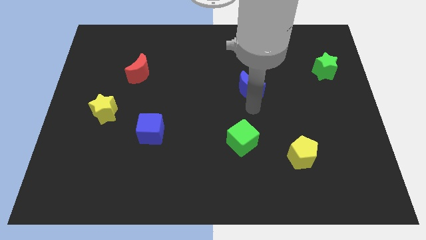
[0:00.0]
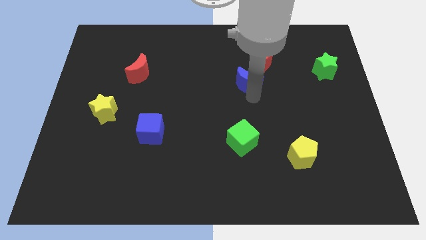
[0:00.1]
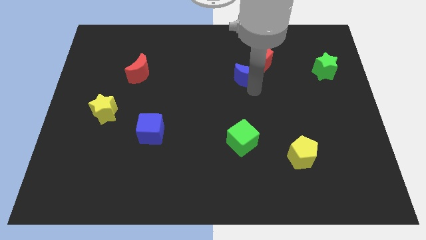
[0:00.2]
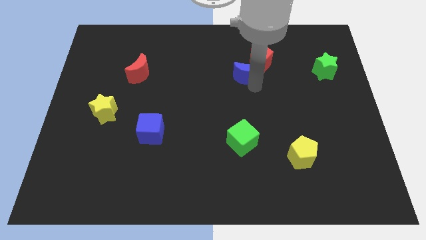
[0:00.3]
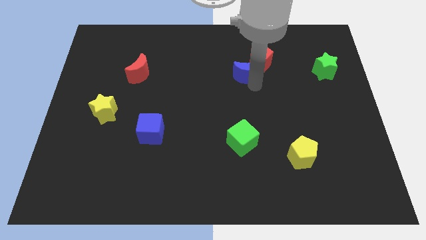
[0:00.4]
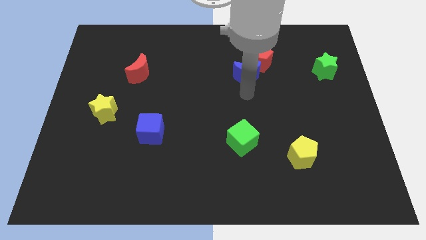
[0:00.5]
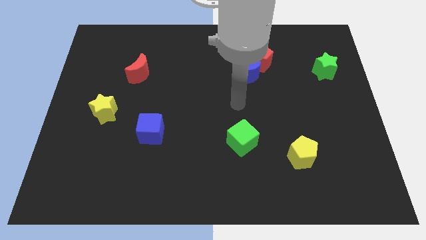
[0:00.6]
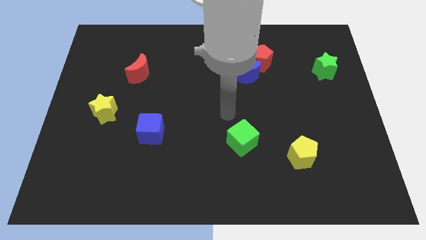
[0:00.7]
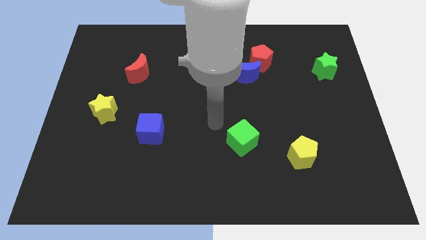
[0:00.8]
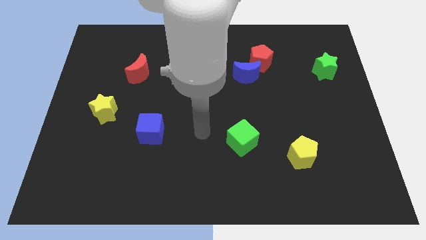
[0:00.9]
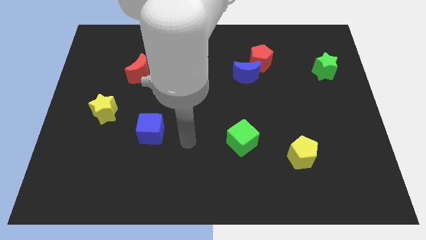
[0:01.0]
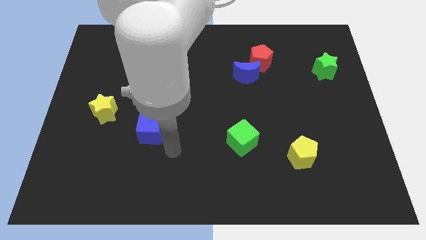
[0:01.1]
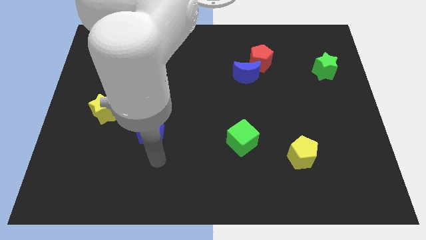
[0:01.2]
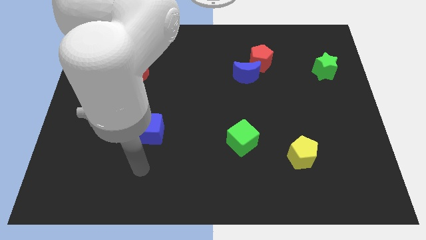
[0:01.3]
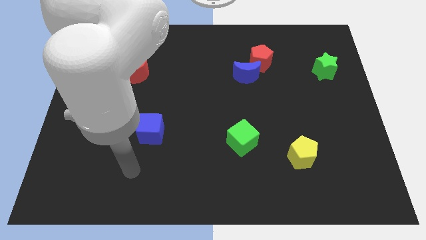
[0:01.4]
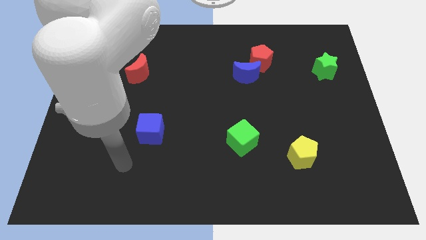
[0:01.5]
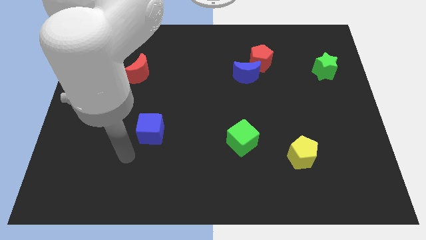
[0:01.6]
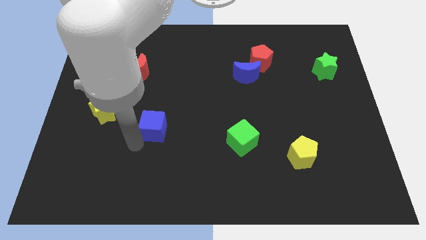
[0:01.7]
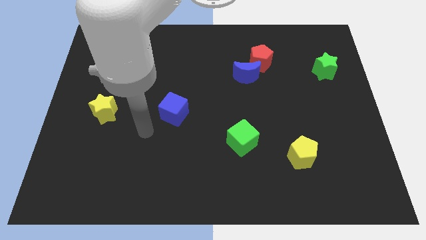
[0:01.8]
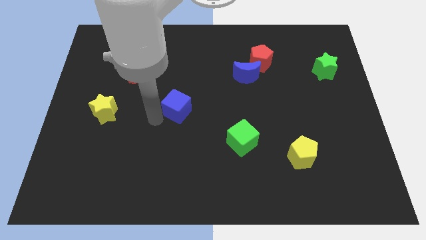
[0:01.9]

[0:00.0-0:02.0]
place the blue crescent at the bottom of the red pentagon

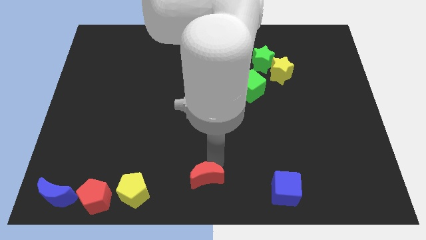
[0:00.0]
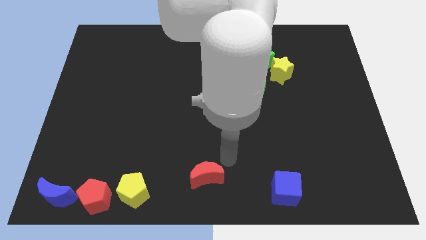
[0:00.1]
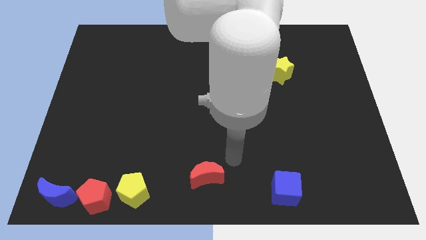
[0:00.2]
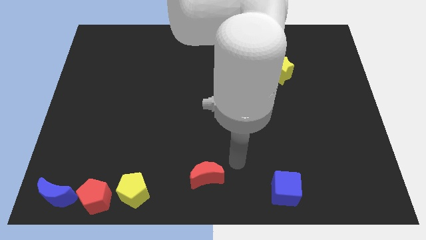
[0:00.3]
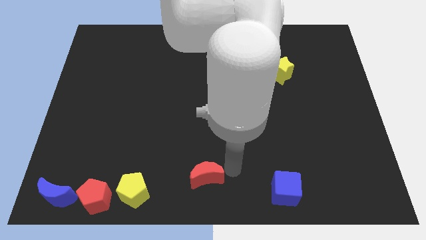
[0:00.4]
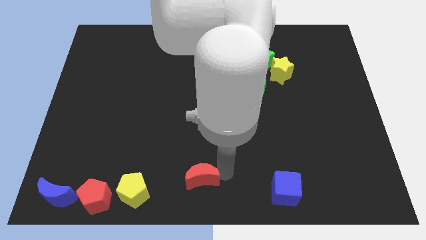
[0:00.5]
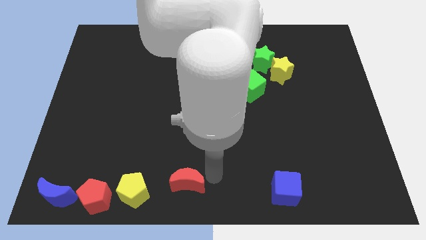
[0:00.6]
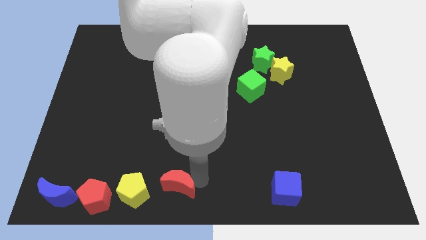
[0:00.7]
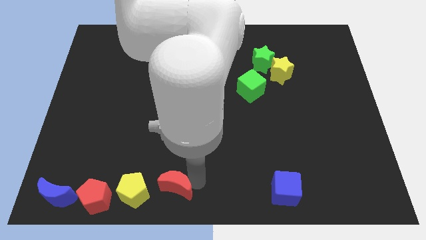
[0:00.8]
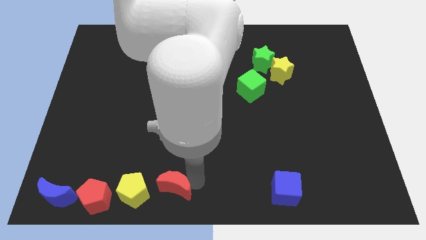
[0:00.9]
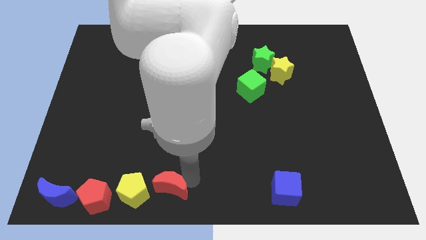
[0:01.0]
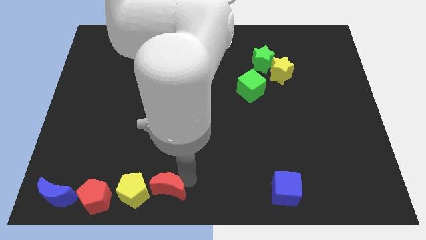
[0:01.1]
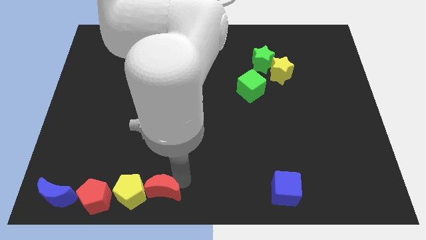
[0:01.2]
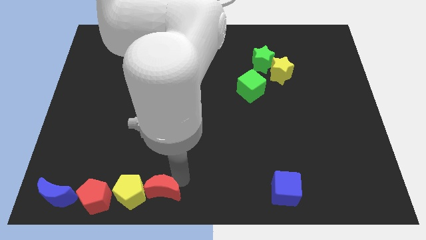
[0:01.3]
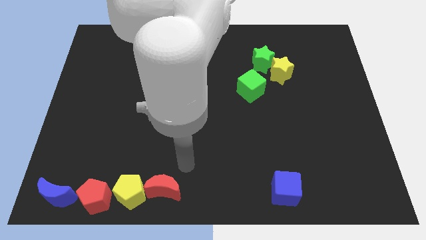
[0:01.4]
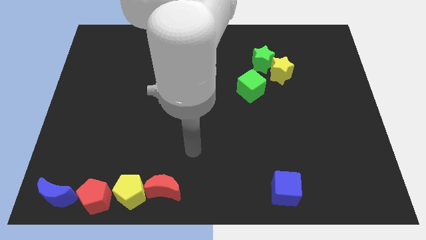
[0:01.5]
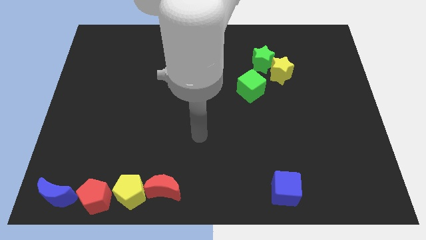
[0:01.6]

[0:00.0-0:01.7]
push the red crescent into yellow pentagon

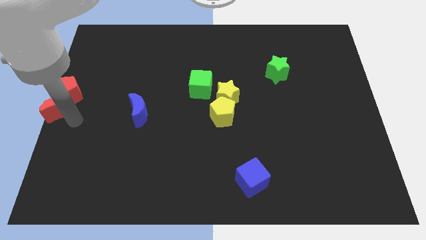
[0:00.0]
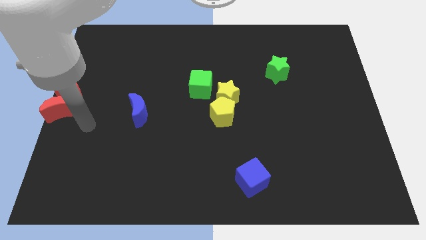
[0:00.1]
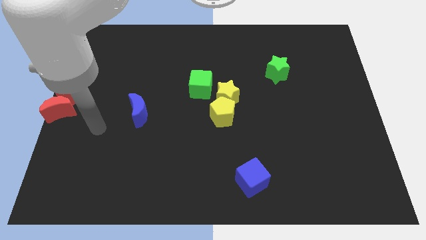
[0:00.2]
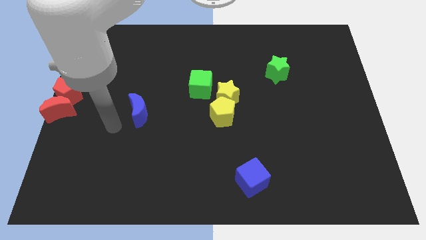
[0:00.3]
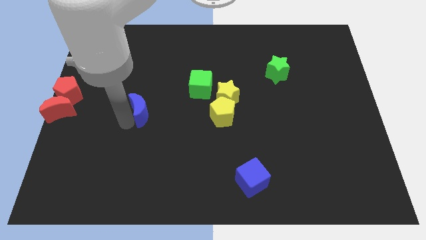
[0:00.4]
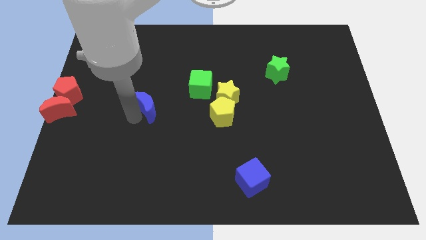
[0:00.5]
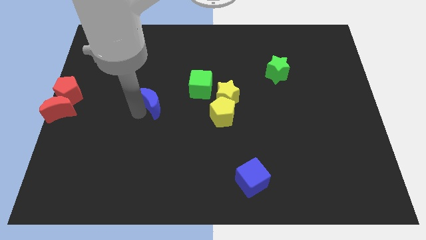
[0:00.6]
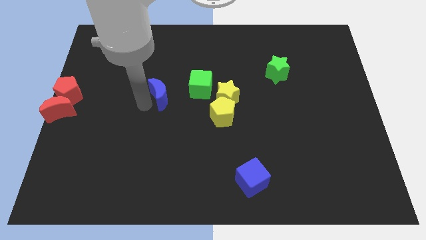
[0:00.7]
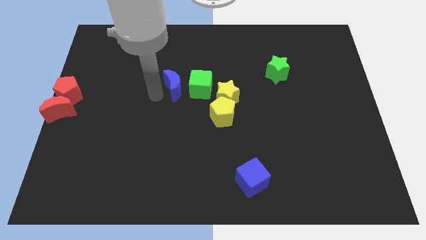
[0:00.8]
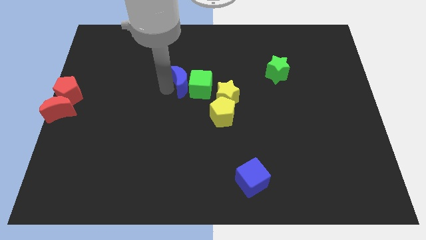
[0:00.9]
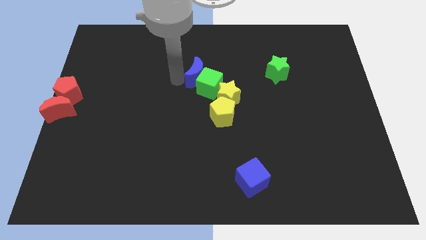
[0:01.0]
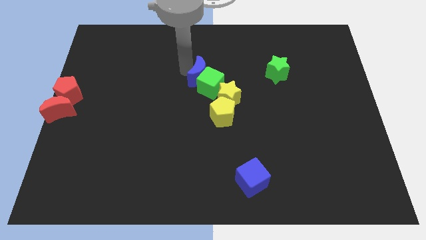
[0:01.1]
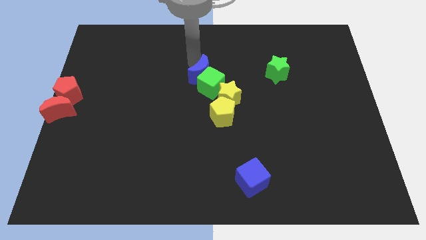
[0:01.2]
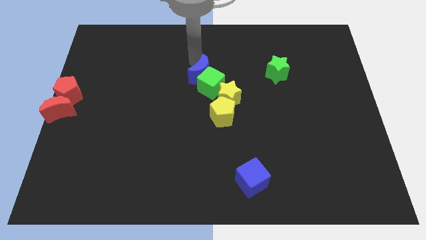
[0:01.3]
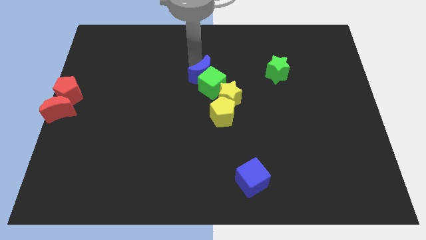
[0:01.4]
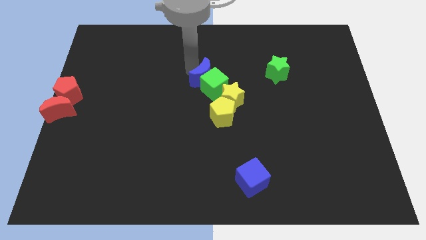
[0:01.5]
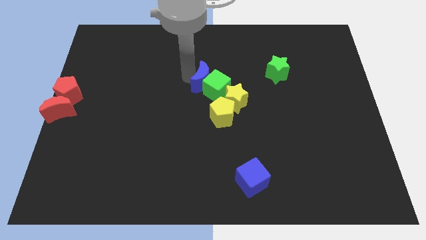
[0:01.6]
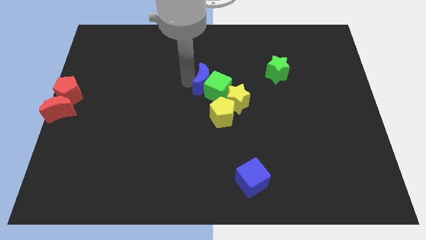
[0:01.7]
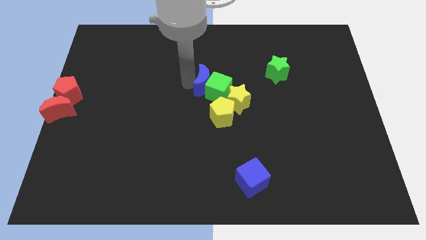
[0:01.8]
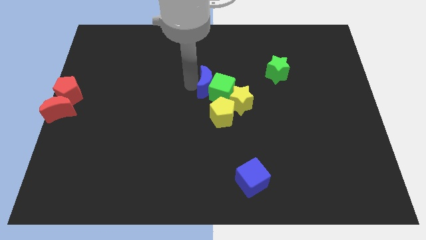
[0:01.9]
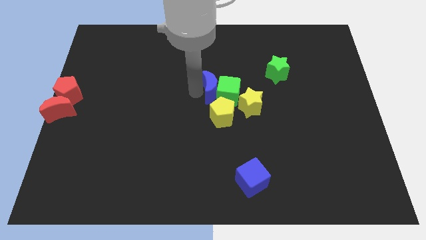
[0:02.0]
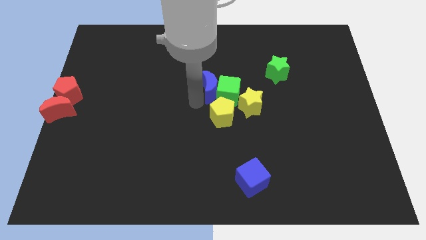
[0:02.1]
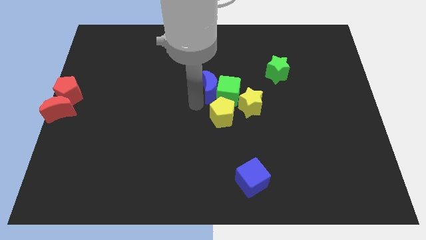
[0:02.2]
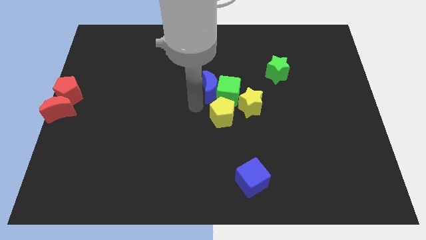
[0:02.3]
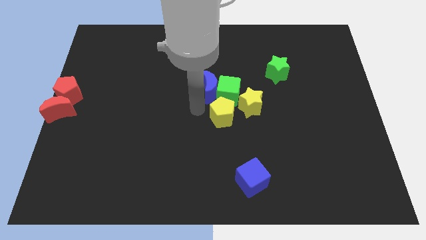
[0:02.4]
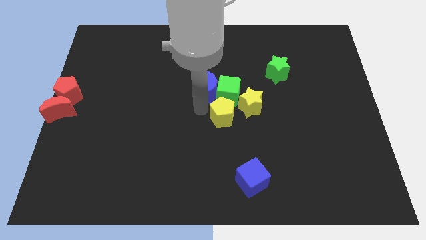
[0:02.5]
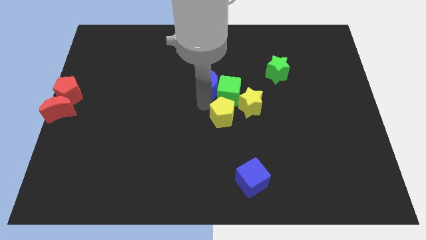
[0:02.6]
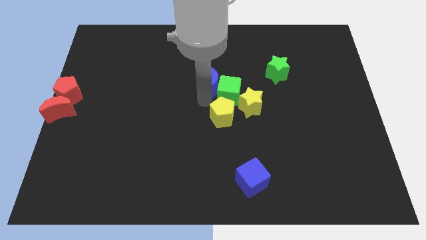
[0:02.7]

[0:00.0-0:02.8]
push the blue moon into the green cube

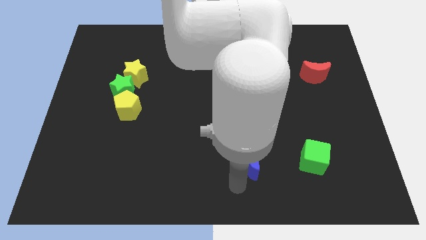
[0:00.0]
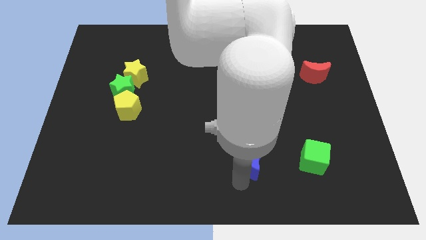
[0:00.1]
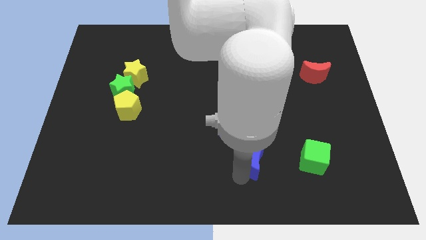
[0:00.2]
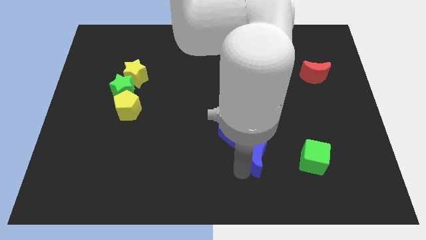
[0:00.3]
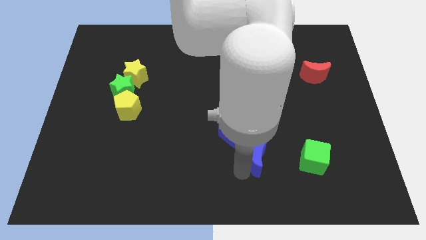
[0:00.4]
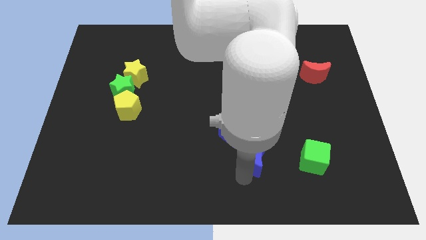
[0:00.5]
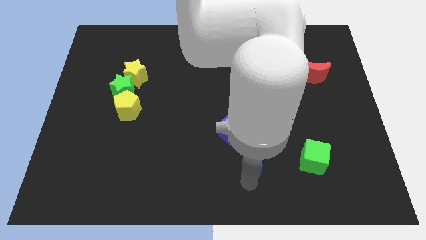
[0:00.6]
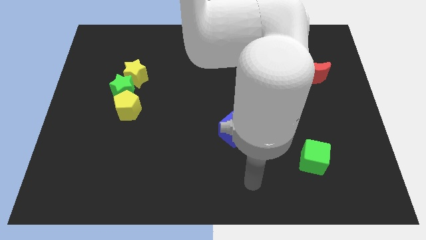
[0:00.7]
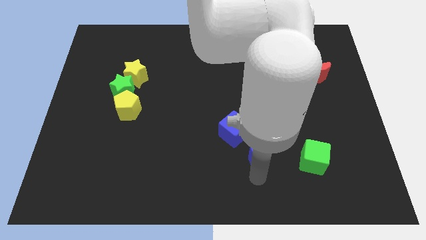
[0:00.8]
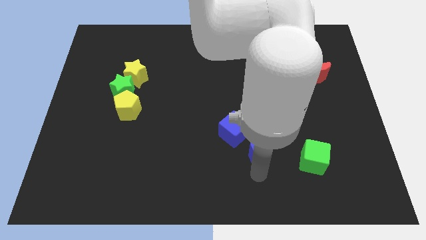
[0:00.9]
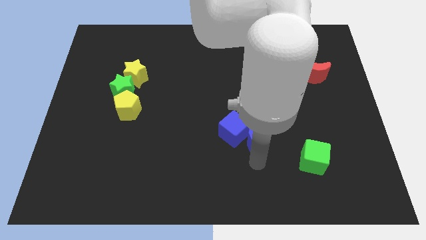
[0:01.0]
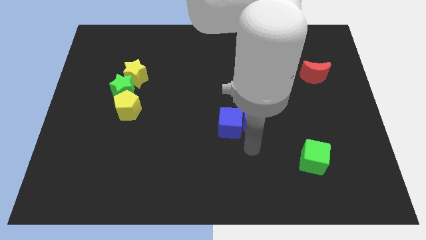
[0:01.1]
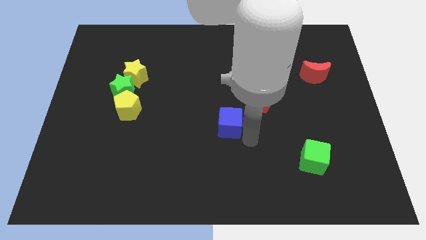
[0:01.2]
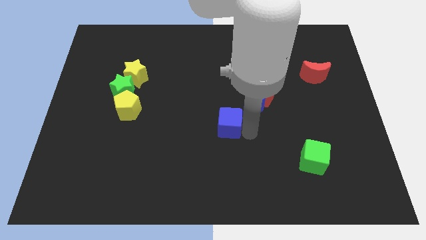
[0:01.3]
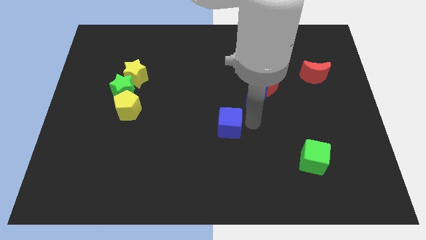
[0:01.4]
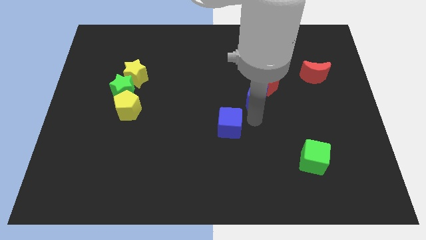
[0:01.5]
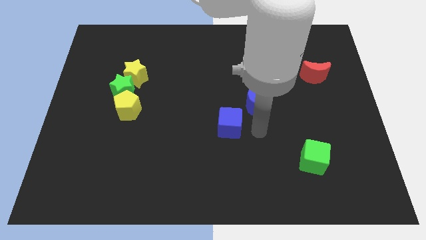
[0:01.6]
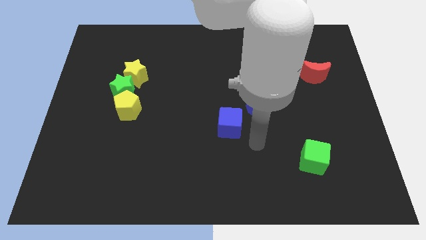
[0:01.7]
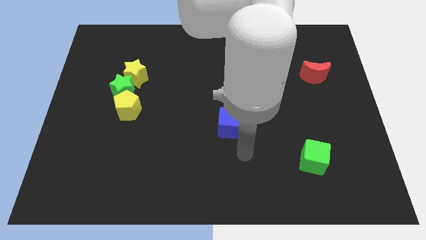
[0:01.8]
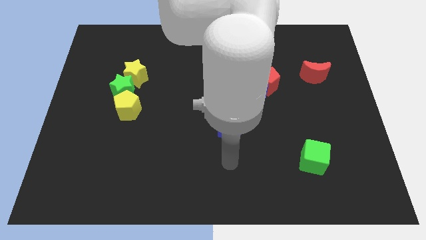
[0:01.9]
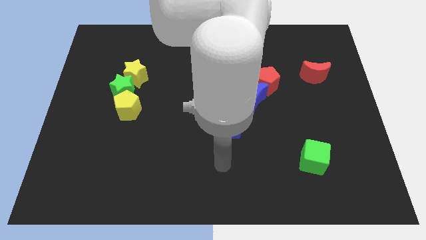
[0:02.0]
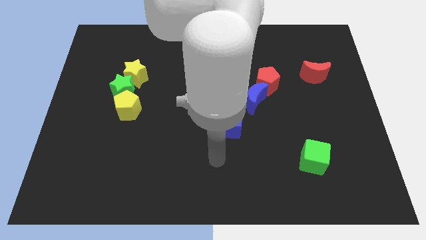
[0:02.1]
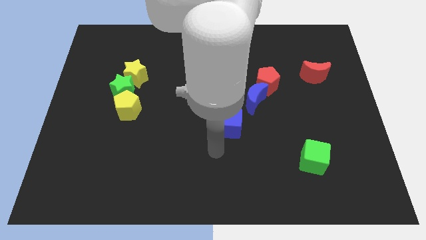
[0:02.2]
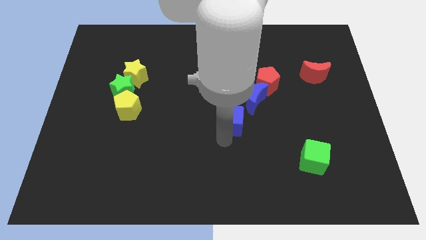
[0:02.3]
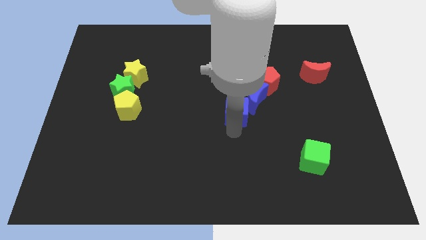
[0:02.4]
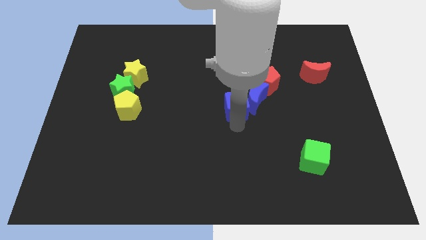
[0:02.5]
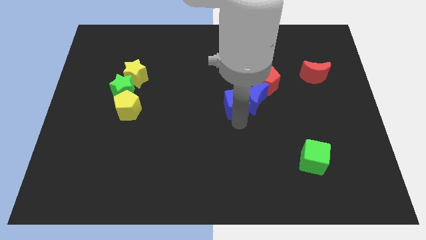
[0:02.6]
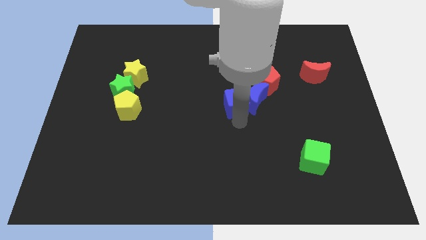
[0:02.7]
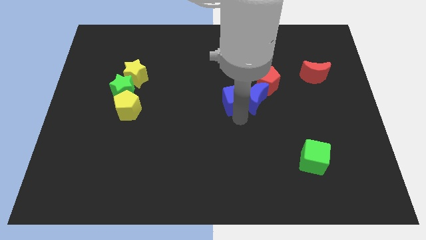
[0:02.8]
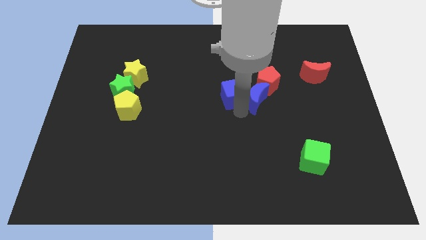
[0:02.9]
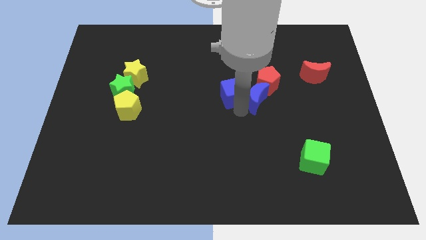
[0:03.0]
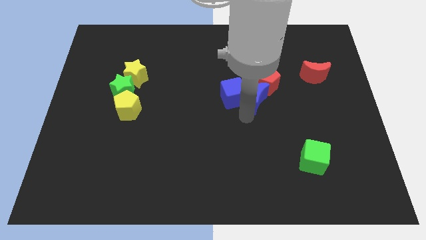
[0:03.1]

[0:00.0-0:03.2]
move the blue blocks and red pentagon to the top
